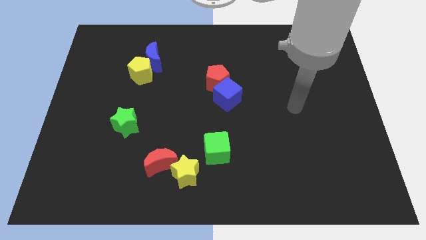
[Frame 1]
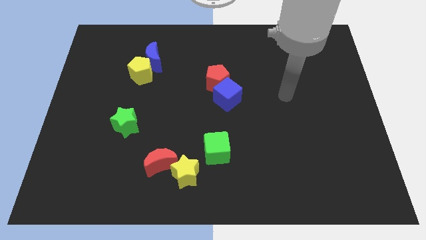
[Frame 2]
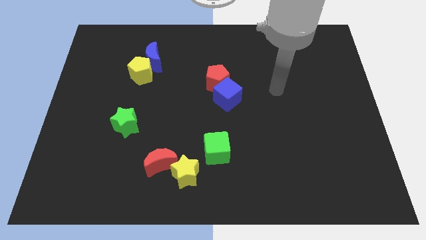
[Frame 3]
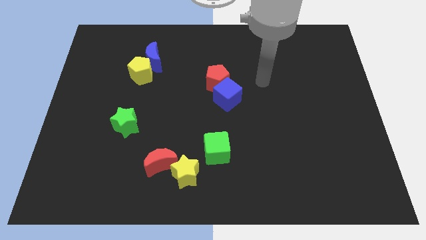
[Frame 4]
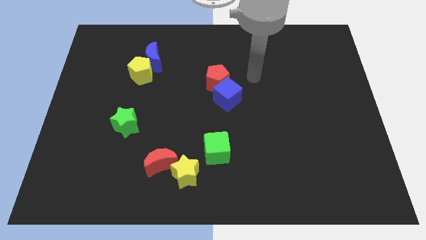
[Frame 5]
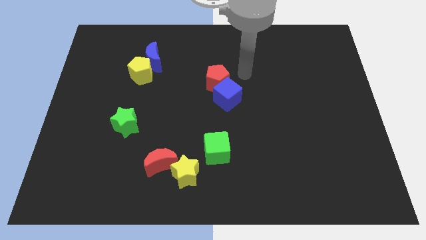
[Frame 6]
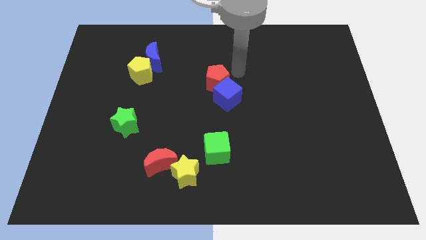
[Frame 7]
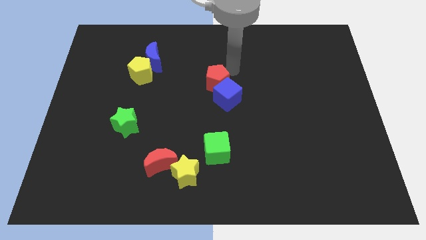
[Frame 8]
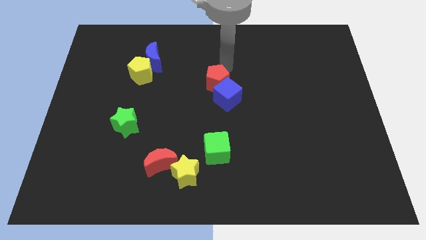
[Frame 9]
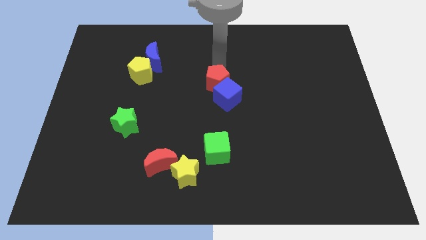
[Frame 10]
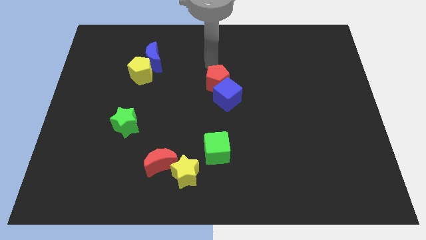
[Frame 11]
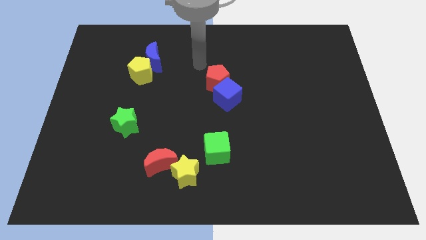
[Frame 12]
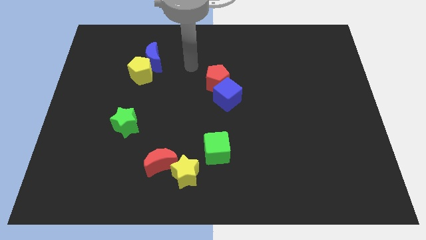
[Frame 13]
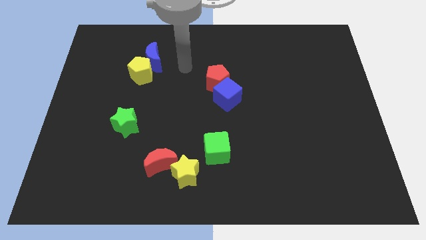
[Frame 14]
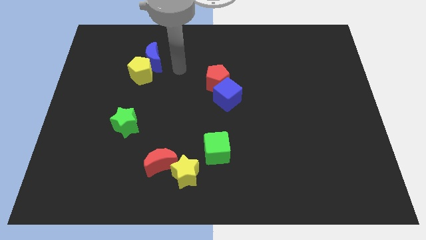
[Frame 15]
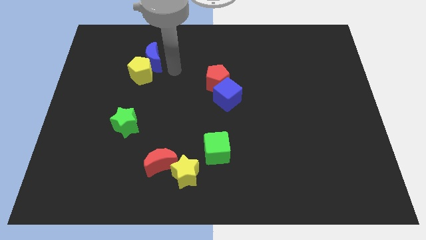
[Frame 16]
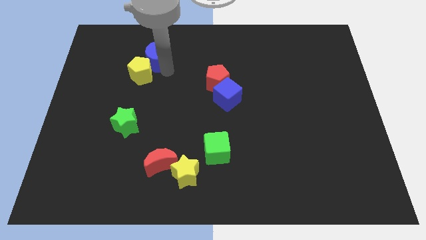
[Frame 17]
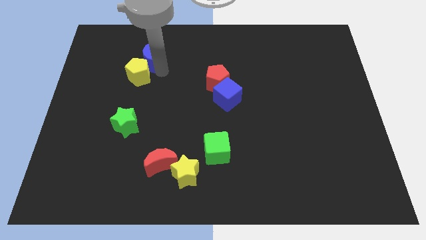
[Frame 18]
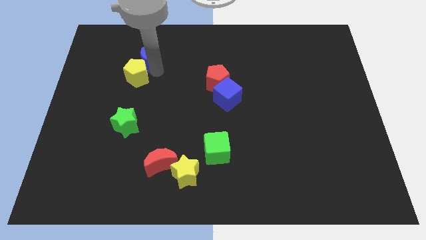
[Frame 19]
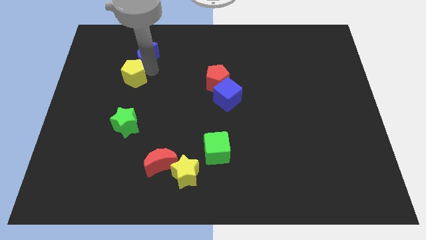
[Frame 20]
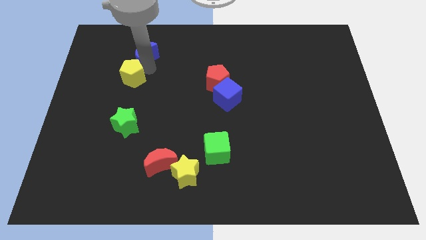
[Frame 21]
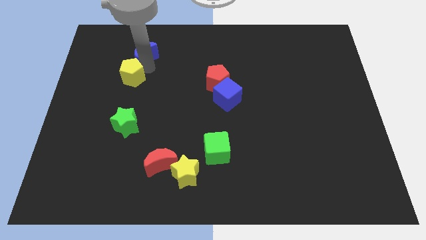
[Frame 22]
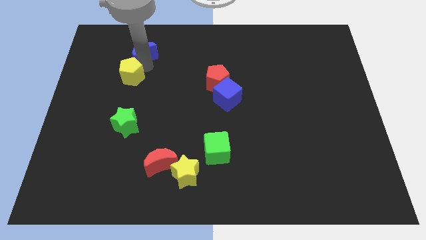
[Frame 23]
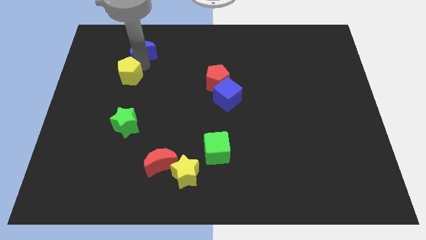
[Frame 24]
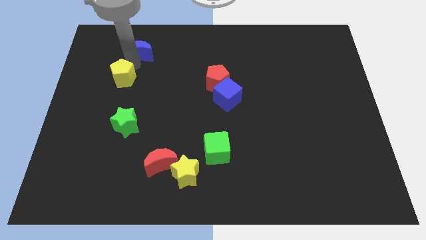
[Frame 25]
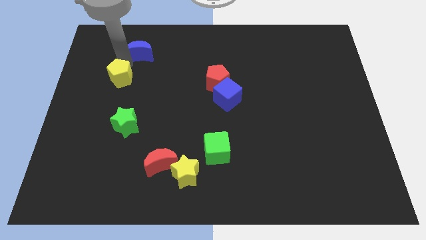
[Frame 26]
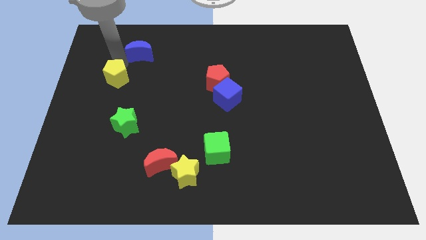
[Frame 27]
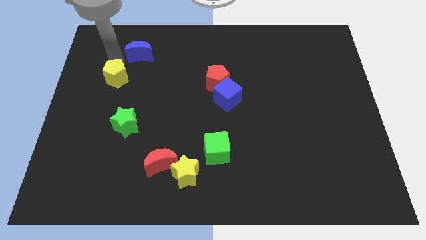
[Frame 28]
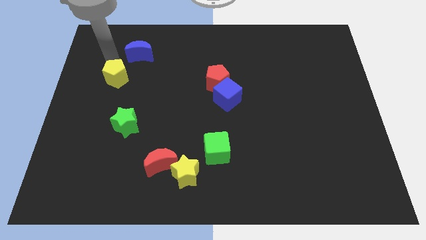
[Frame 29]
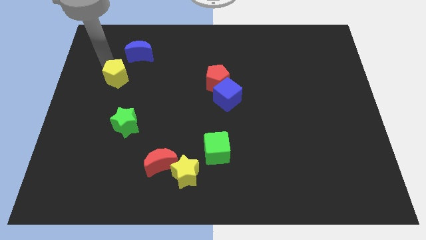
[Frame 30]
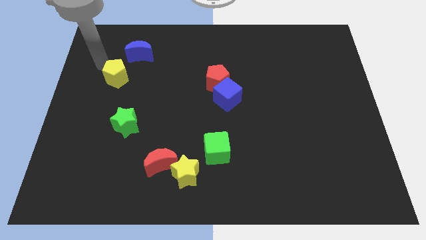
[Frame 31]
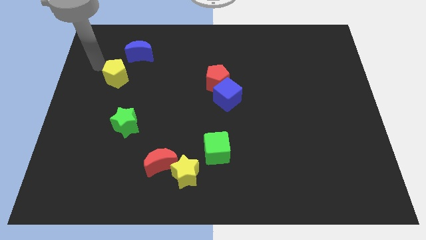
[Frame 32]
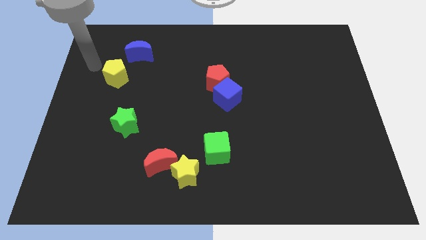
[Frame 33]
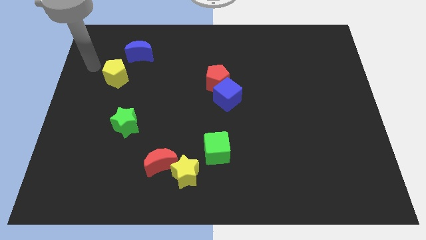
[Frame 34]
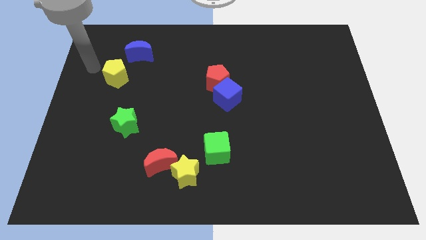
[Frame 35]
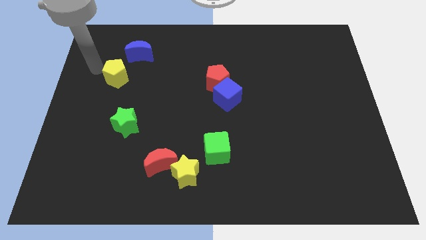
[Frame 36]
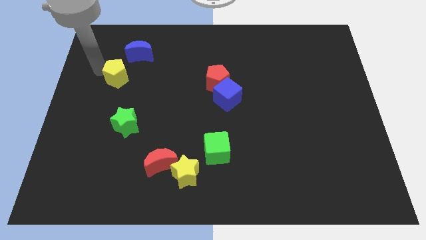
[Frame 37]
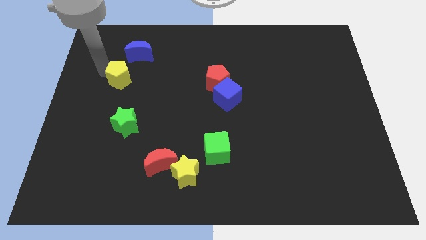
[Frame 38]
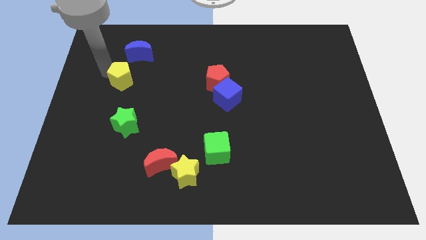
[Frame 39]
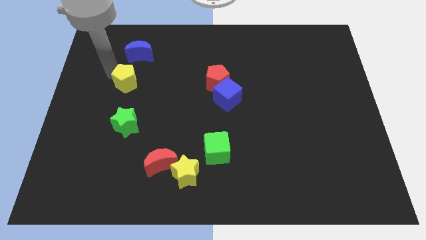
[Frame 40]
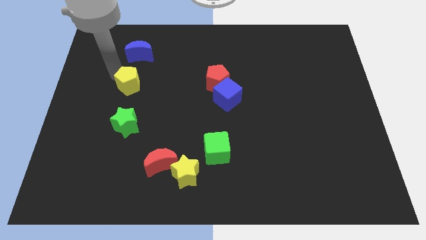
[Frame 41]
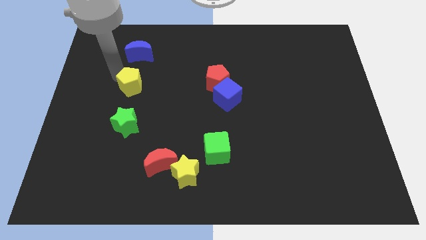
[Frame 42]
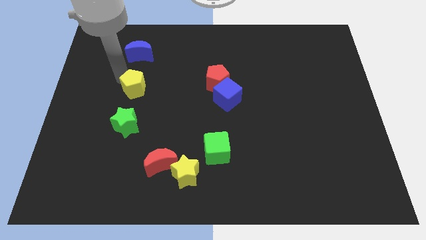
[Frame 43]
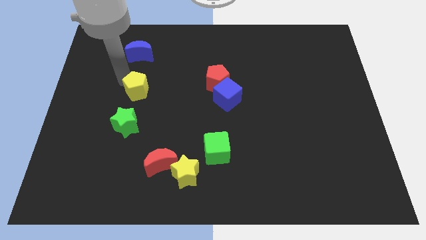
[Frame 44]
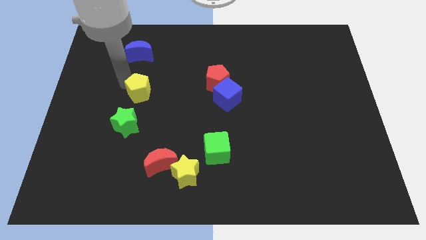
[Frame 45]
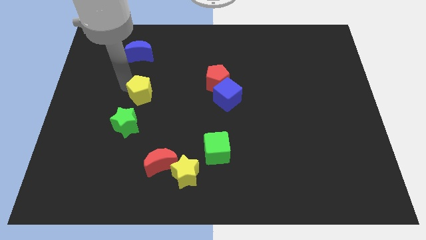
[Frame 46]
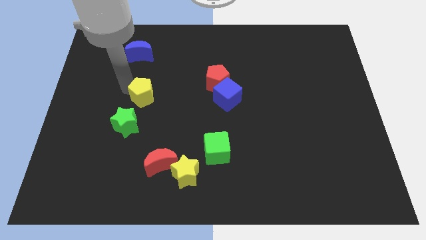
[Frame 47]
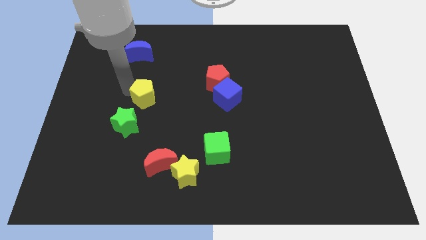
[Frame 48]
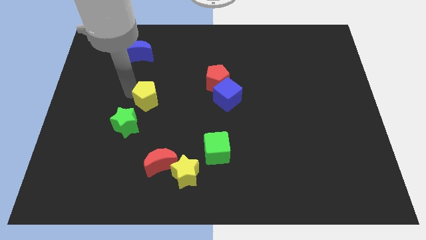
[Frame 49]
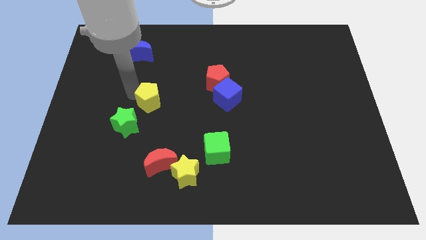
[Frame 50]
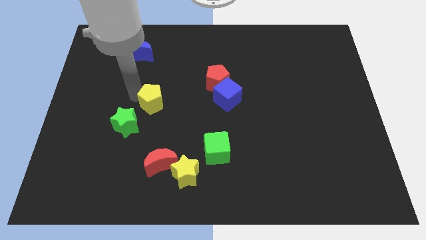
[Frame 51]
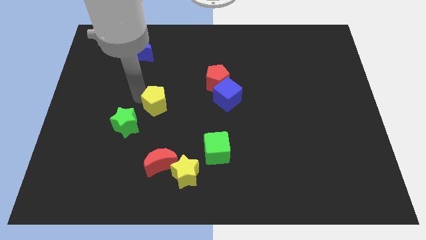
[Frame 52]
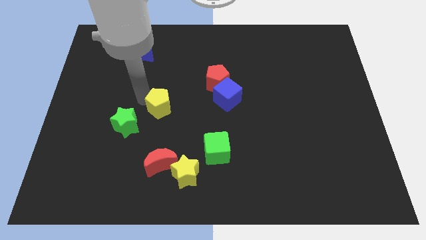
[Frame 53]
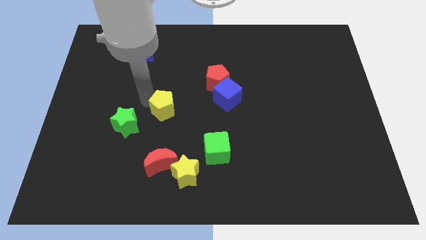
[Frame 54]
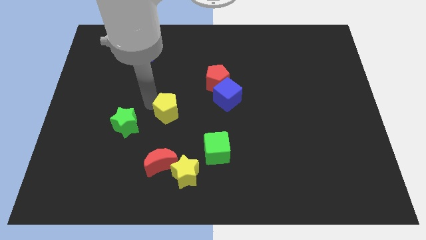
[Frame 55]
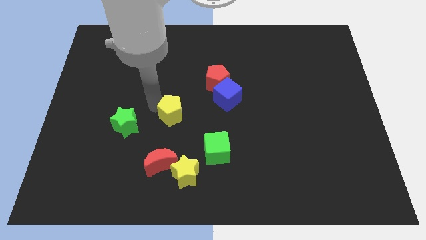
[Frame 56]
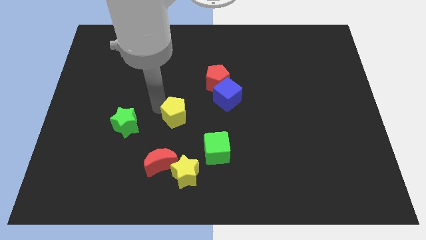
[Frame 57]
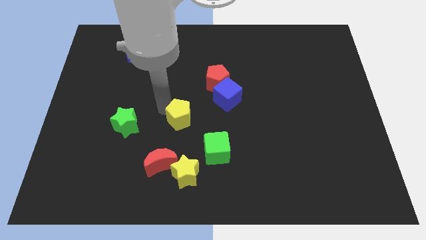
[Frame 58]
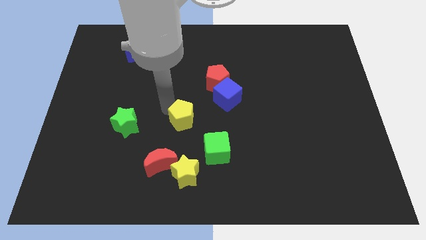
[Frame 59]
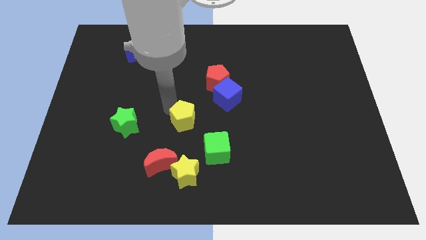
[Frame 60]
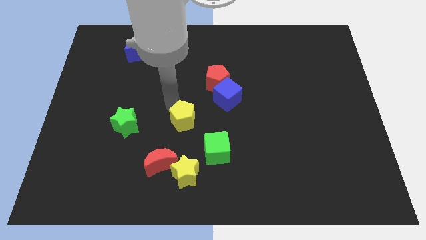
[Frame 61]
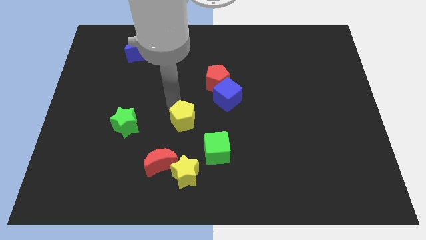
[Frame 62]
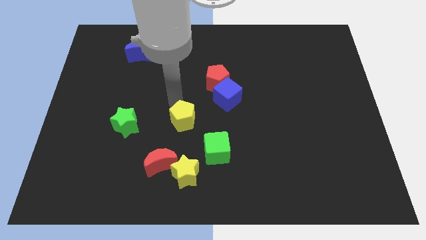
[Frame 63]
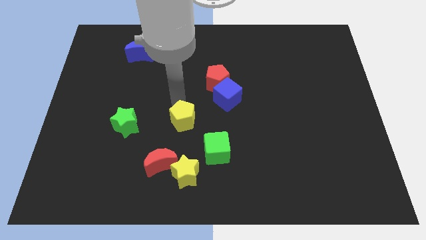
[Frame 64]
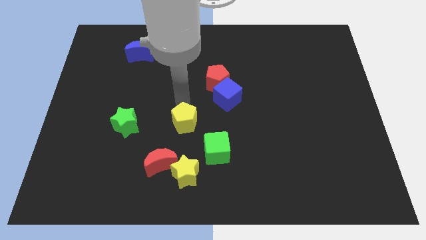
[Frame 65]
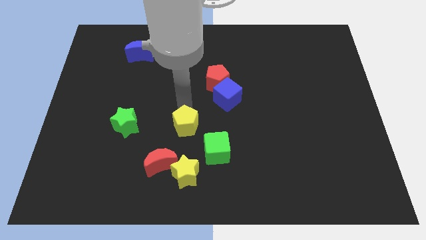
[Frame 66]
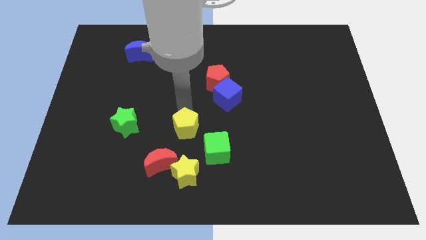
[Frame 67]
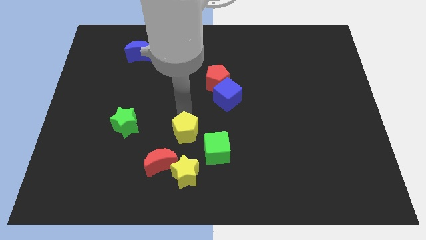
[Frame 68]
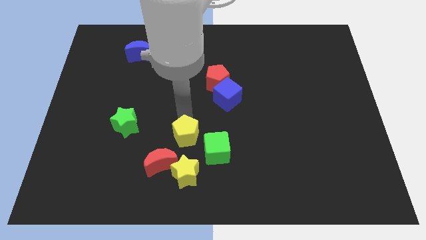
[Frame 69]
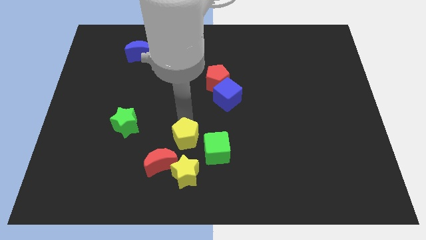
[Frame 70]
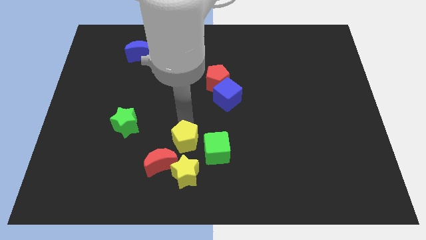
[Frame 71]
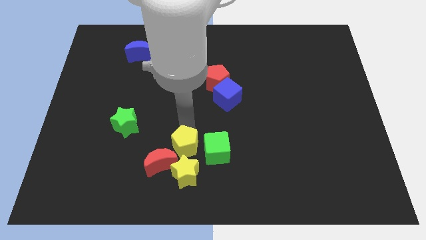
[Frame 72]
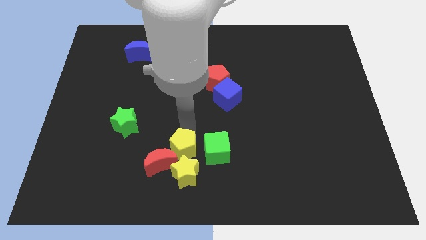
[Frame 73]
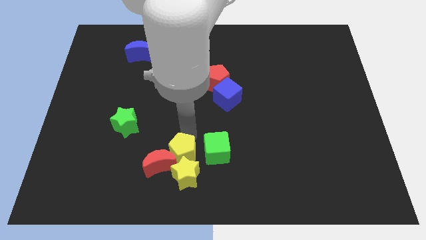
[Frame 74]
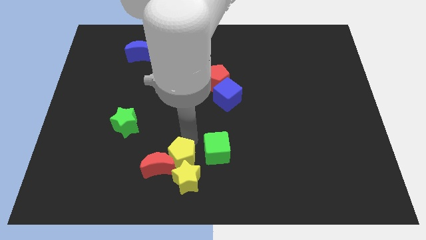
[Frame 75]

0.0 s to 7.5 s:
push the yellow pentagon to the yellow star

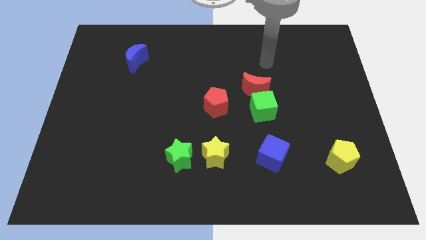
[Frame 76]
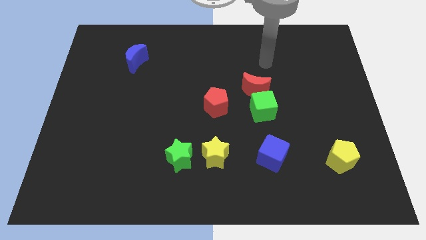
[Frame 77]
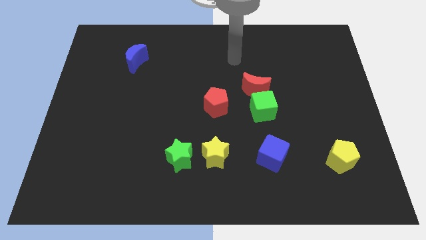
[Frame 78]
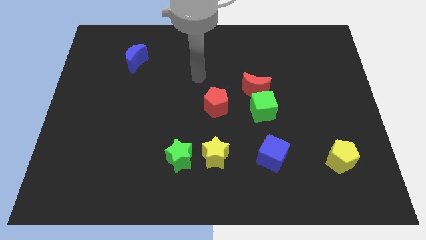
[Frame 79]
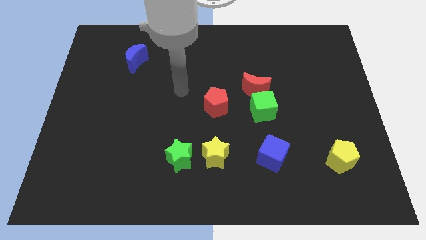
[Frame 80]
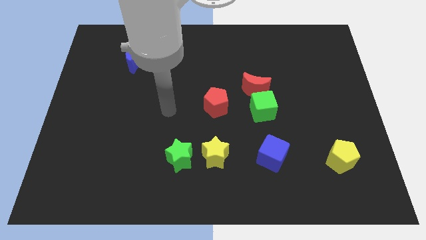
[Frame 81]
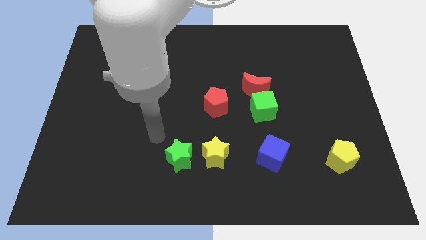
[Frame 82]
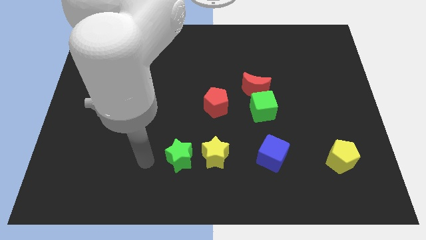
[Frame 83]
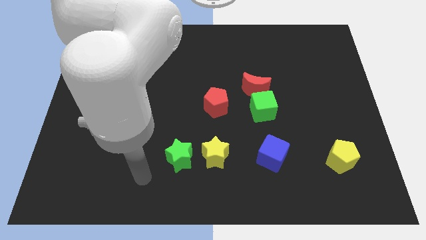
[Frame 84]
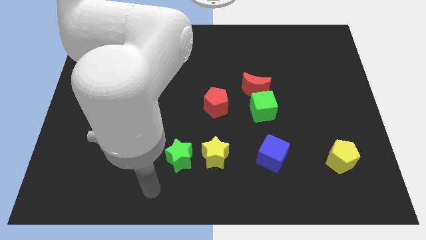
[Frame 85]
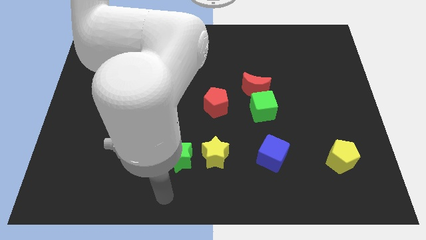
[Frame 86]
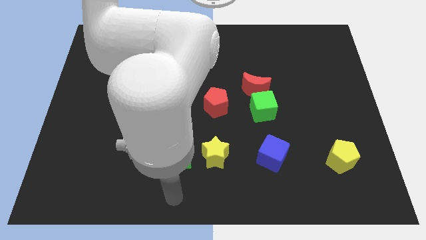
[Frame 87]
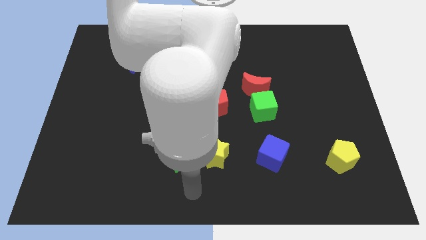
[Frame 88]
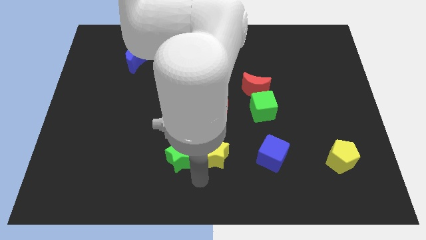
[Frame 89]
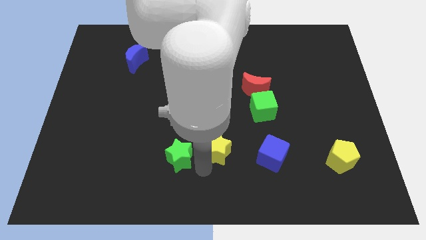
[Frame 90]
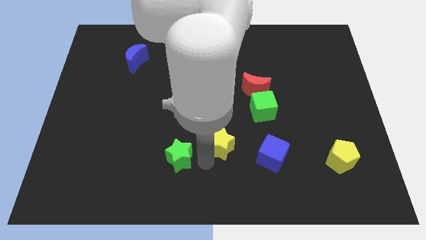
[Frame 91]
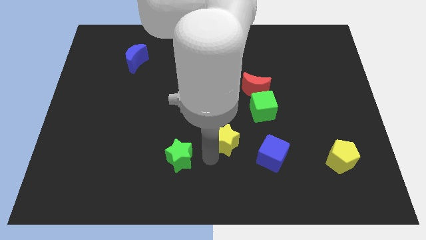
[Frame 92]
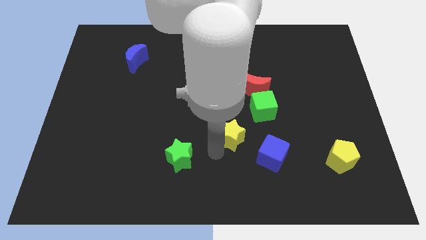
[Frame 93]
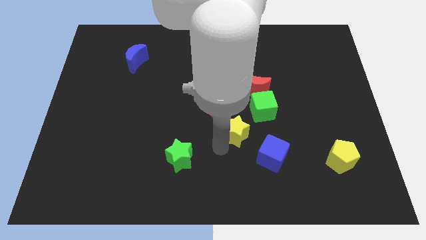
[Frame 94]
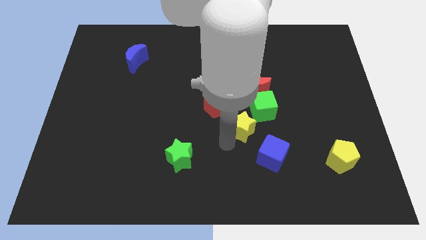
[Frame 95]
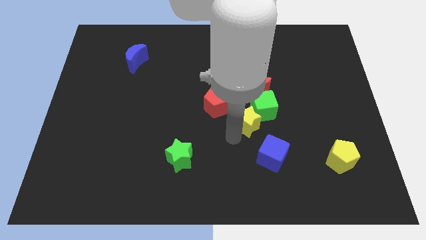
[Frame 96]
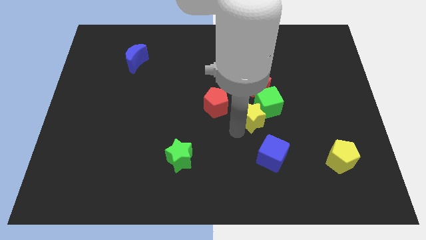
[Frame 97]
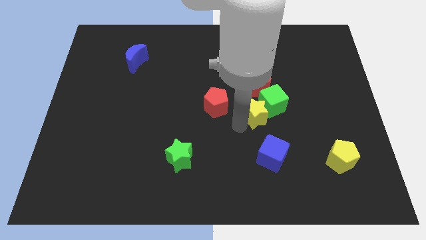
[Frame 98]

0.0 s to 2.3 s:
slide the yellow star close to the green cube
